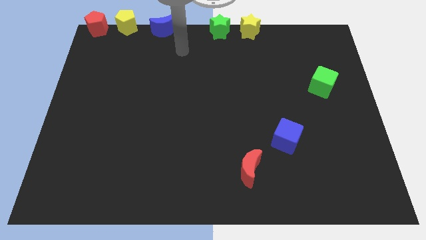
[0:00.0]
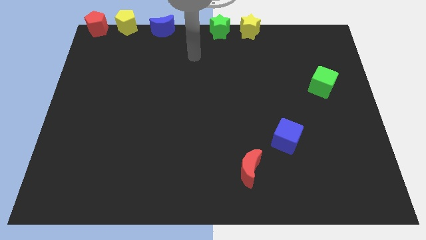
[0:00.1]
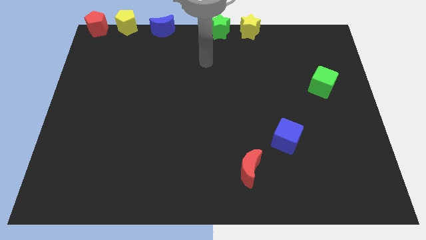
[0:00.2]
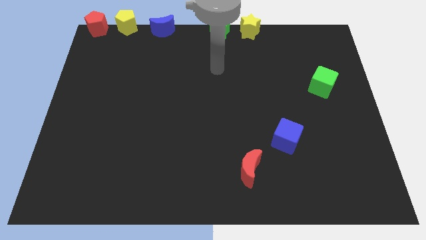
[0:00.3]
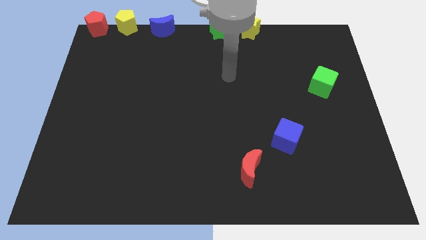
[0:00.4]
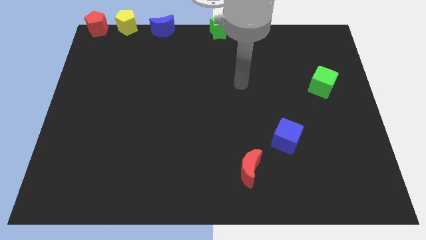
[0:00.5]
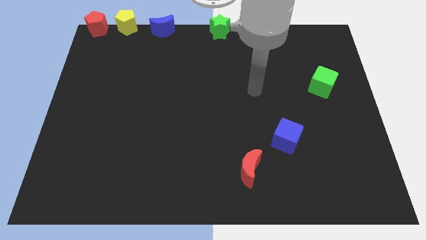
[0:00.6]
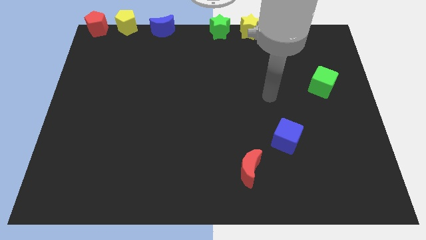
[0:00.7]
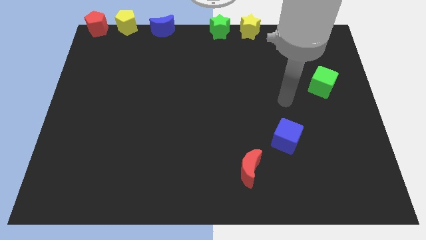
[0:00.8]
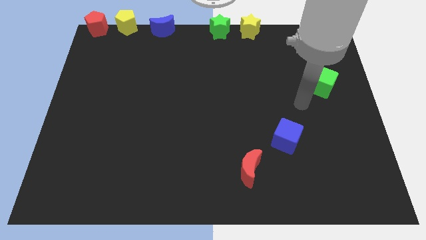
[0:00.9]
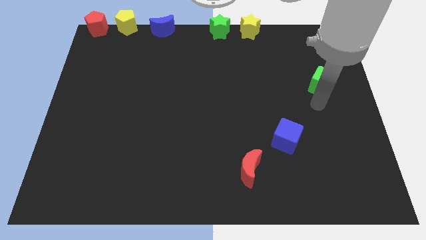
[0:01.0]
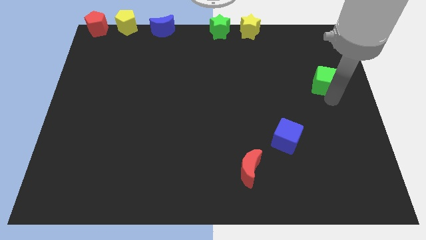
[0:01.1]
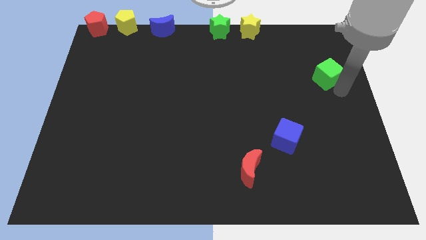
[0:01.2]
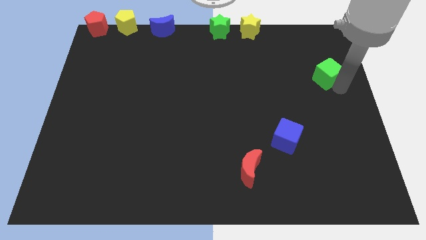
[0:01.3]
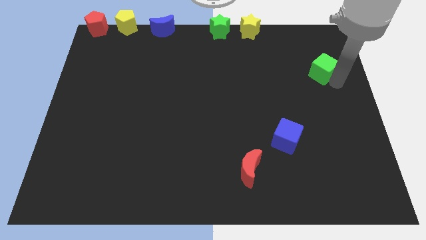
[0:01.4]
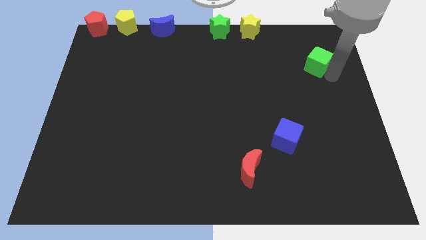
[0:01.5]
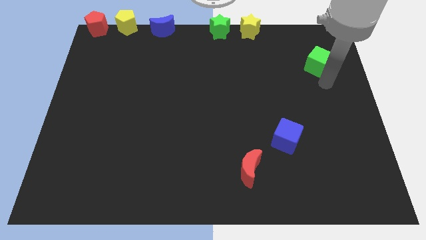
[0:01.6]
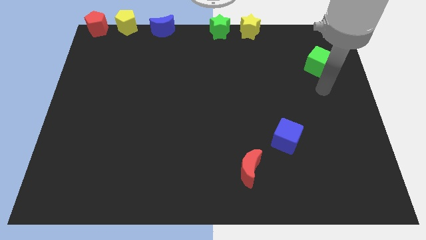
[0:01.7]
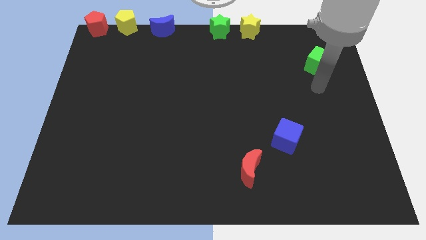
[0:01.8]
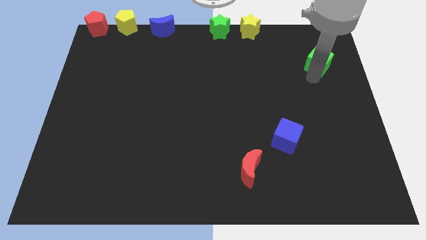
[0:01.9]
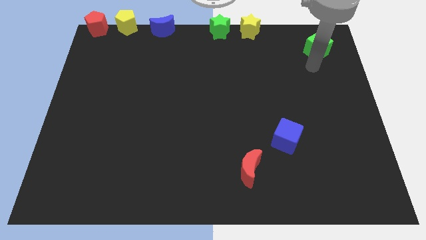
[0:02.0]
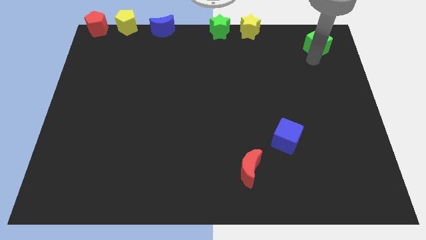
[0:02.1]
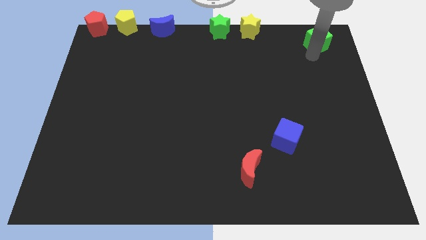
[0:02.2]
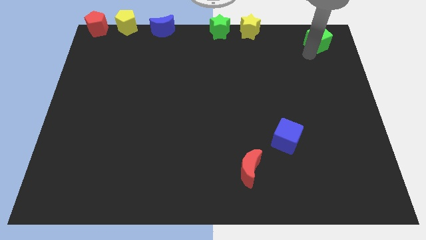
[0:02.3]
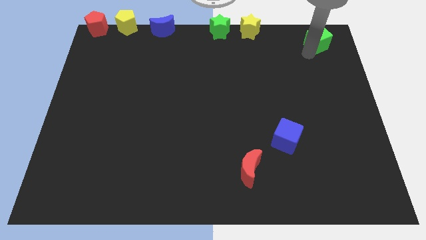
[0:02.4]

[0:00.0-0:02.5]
push the green cube towards top right side

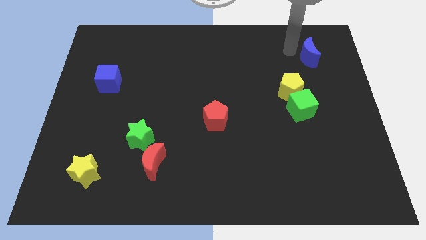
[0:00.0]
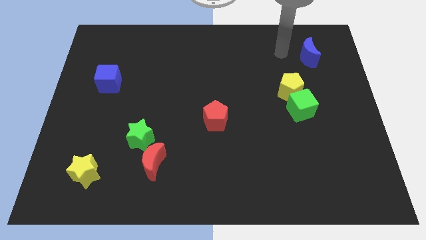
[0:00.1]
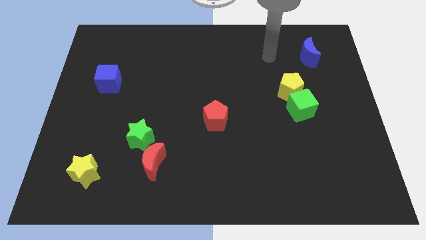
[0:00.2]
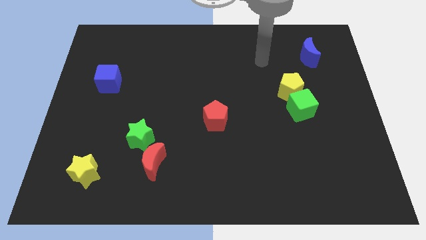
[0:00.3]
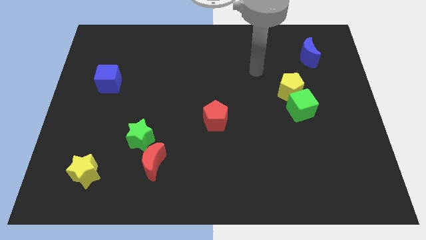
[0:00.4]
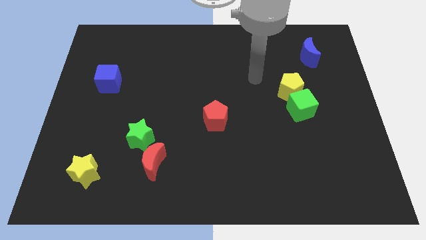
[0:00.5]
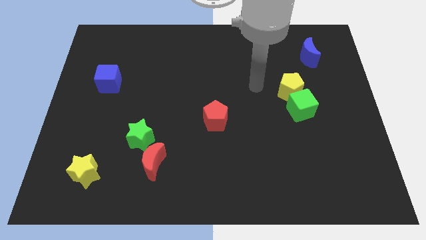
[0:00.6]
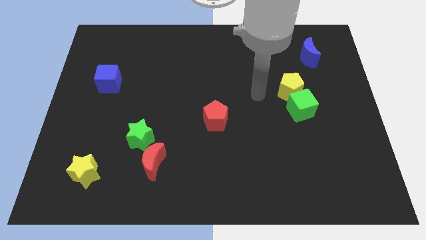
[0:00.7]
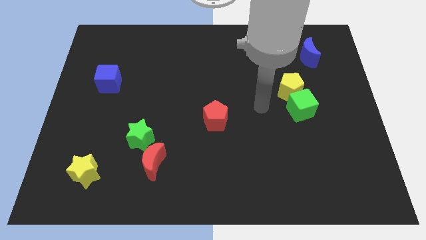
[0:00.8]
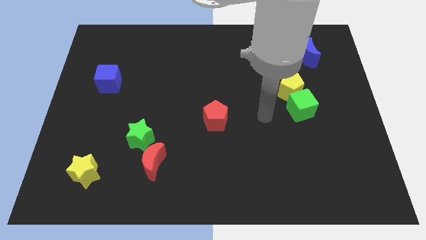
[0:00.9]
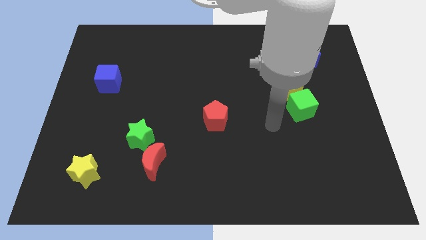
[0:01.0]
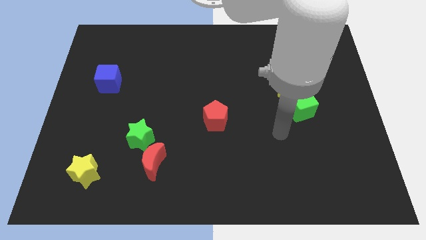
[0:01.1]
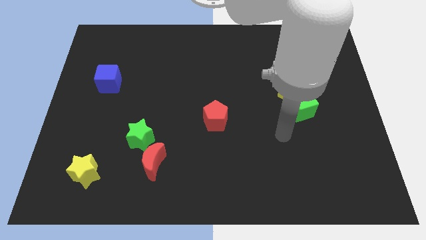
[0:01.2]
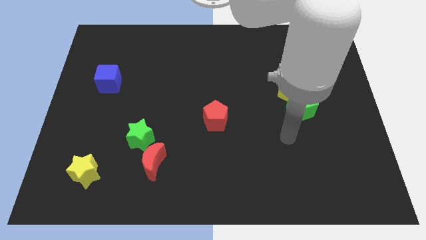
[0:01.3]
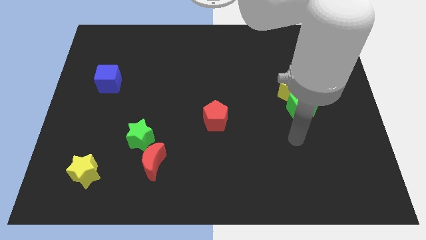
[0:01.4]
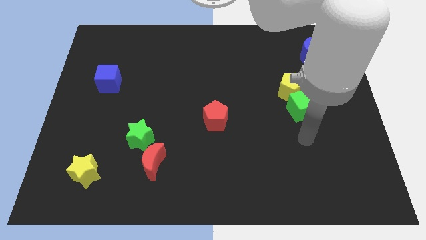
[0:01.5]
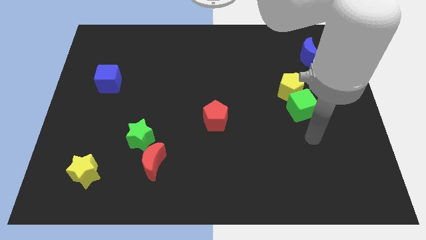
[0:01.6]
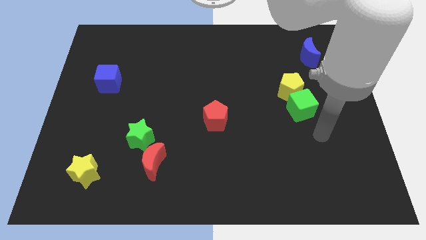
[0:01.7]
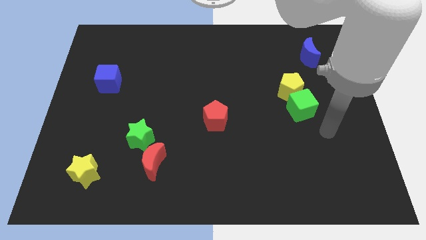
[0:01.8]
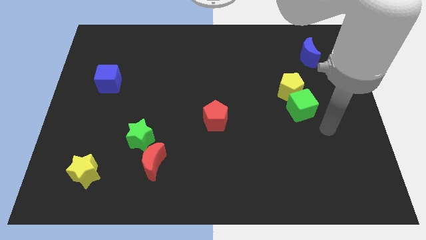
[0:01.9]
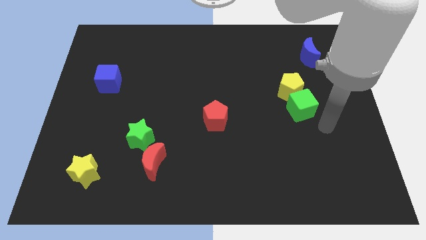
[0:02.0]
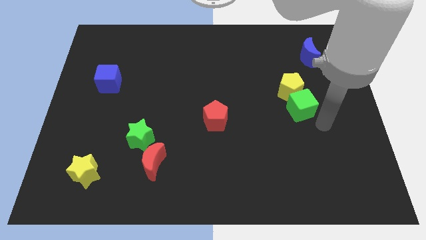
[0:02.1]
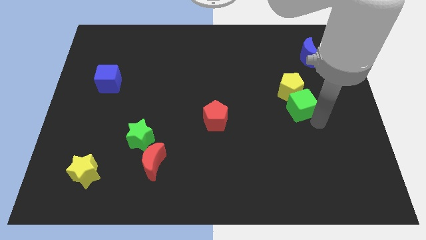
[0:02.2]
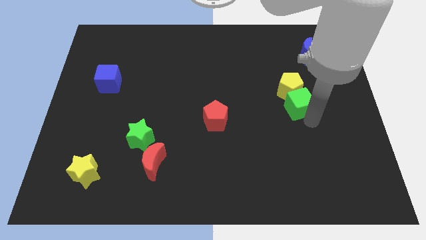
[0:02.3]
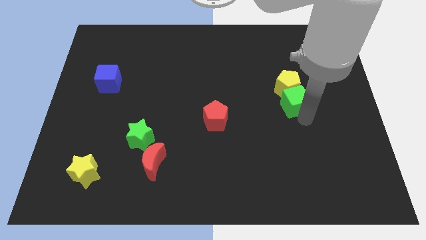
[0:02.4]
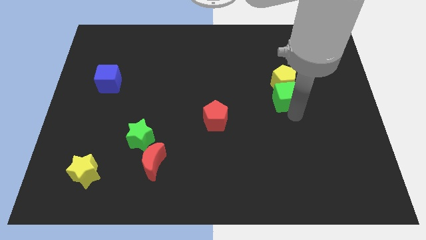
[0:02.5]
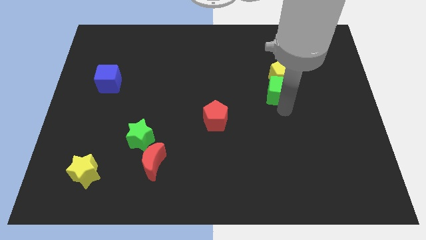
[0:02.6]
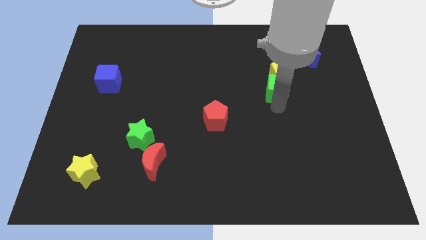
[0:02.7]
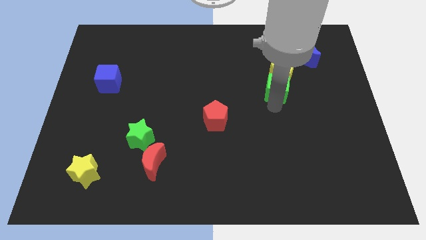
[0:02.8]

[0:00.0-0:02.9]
drag the green cube slightly upwards

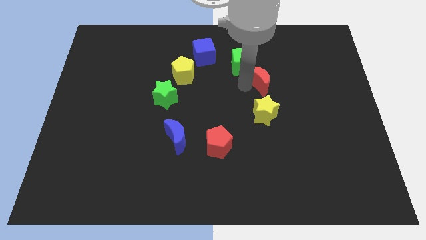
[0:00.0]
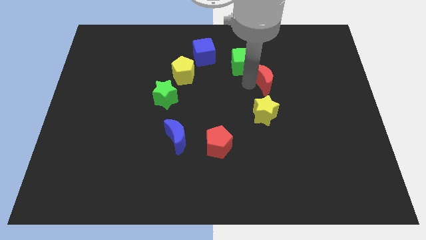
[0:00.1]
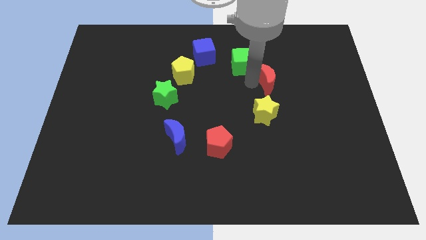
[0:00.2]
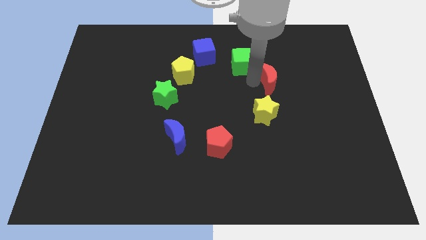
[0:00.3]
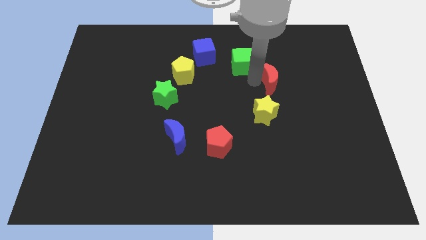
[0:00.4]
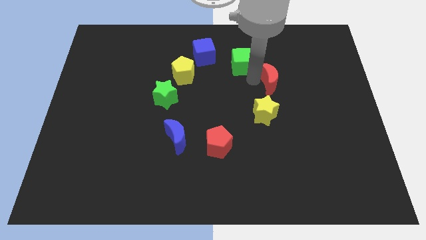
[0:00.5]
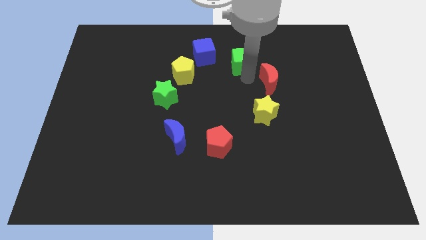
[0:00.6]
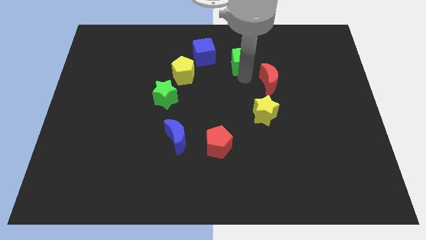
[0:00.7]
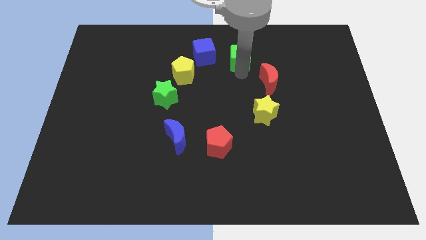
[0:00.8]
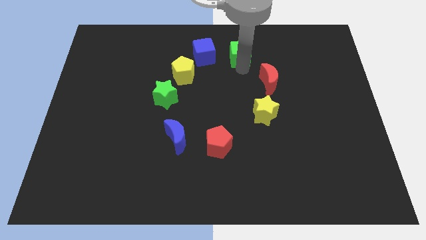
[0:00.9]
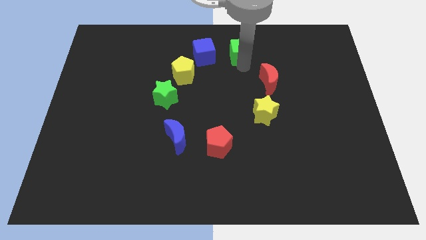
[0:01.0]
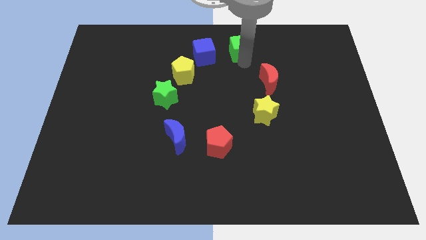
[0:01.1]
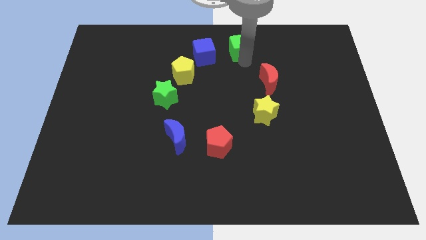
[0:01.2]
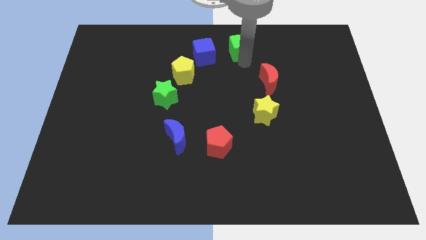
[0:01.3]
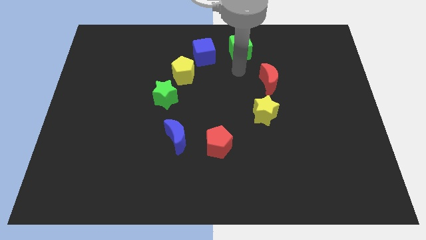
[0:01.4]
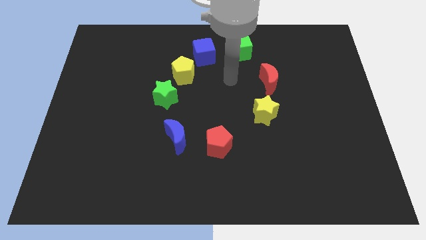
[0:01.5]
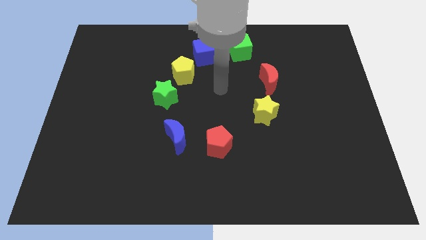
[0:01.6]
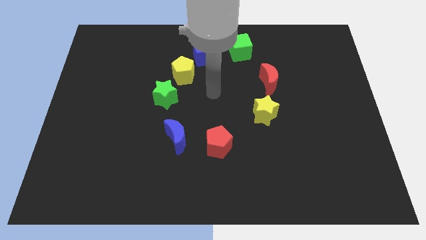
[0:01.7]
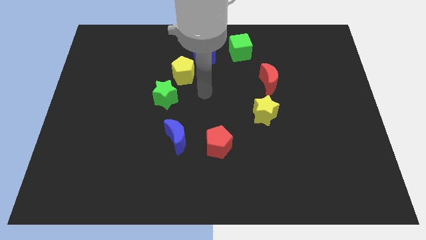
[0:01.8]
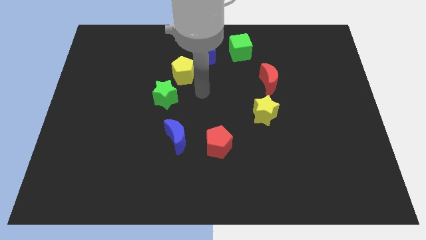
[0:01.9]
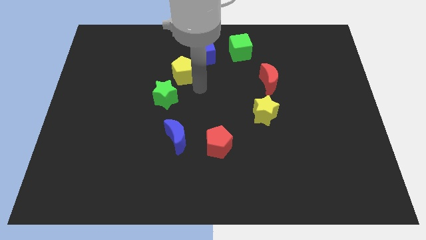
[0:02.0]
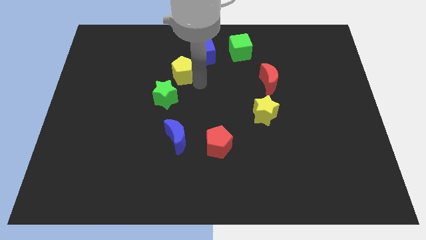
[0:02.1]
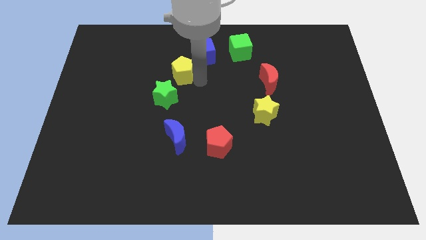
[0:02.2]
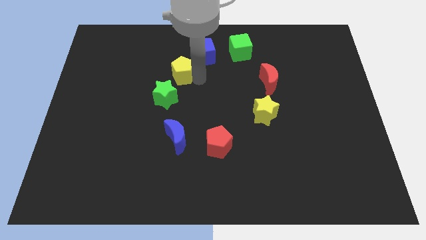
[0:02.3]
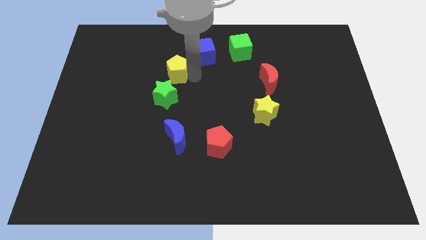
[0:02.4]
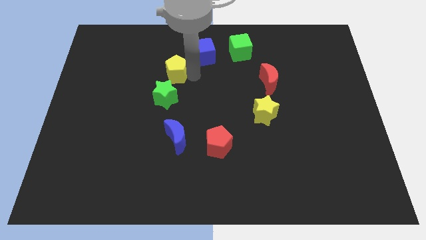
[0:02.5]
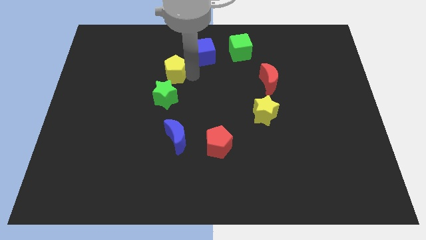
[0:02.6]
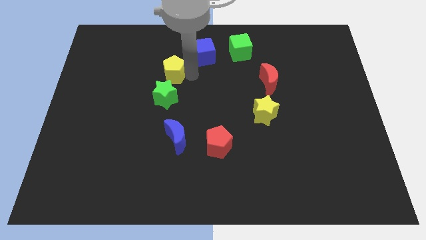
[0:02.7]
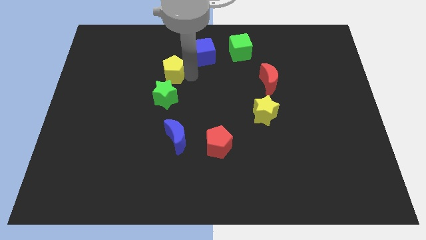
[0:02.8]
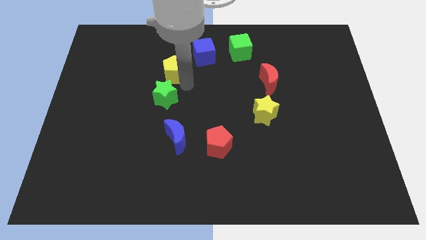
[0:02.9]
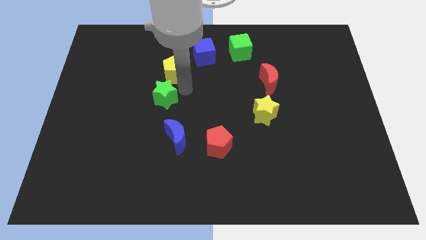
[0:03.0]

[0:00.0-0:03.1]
slightly move the yellow pentagon towards the left

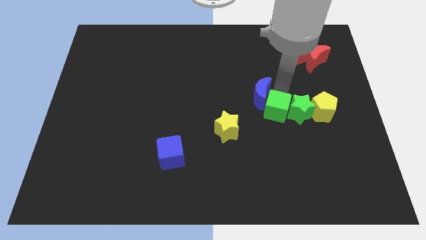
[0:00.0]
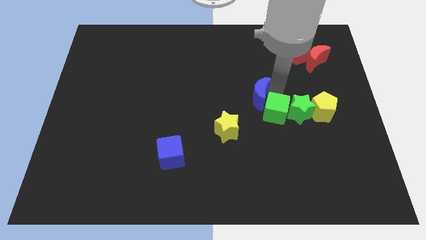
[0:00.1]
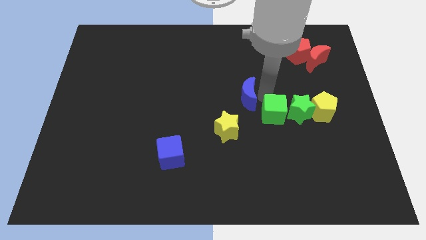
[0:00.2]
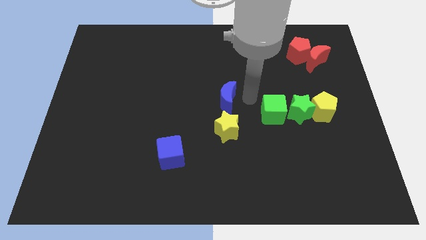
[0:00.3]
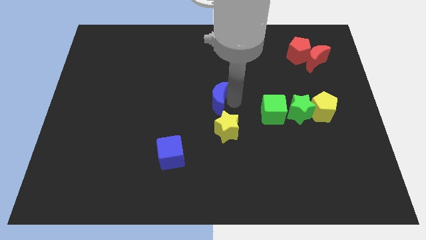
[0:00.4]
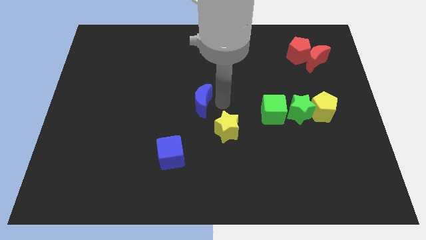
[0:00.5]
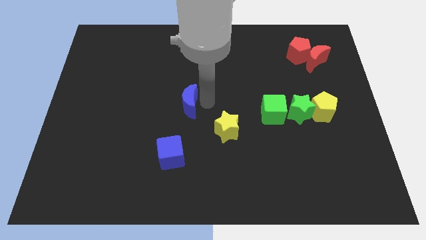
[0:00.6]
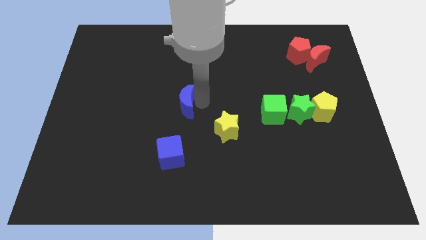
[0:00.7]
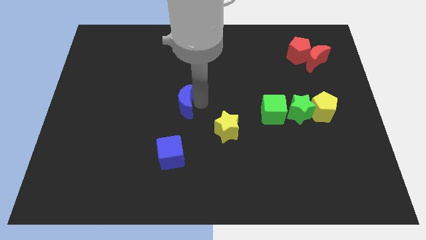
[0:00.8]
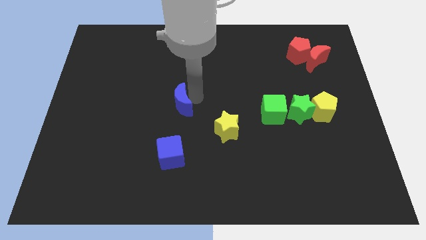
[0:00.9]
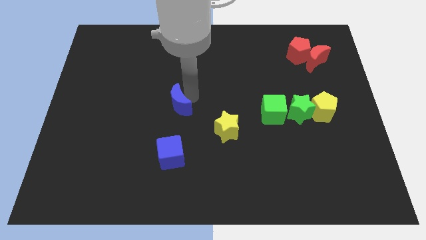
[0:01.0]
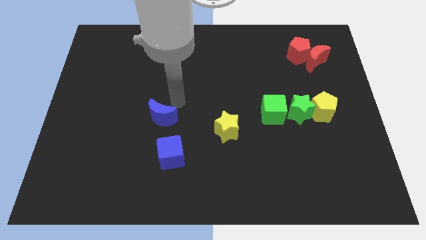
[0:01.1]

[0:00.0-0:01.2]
move the blue crescent away from the green cube
